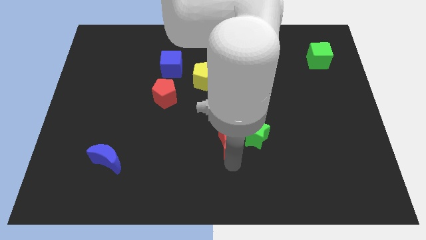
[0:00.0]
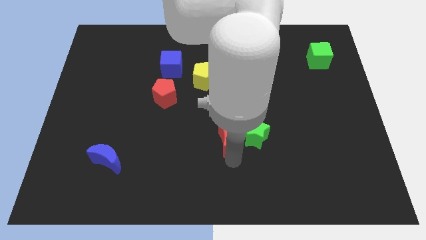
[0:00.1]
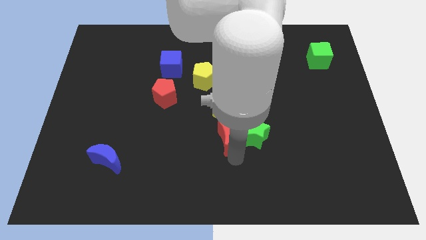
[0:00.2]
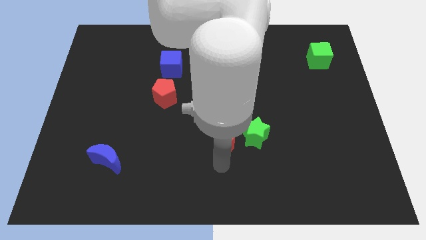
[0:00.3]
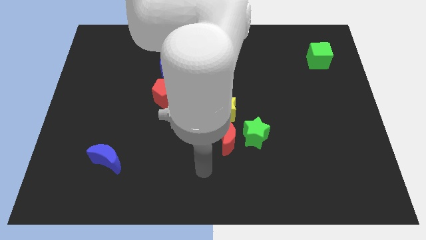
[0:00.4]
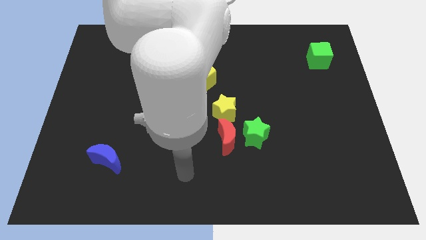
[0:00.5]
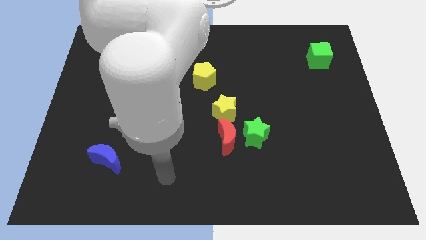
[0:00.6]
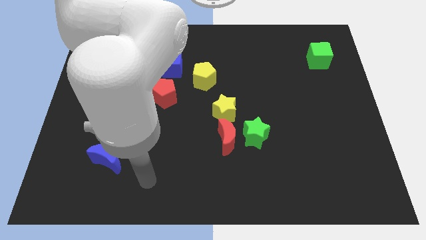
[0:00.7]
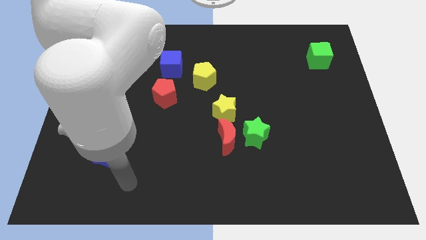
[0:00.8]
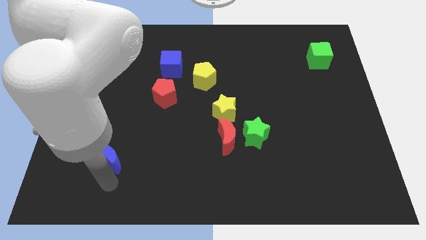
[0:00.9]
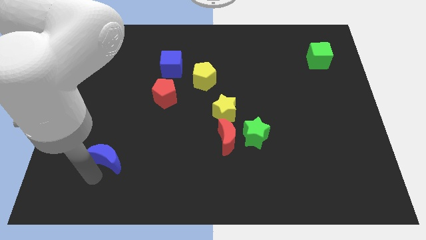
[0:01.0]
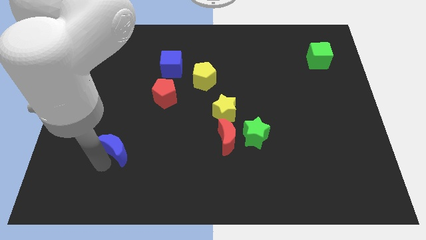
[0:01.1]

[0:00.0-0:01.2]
move your arm to the bottom of the blue moon

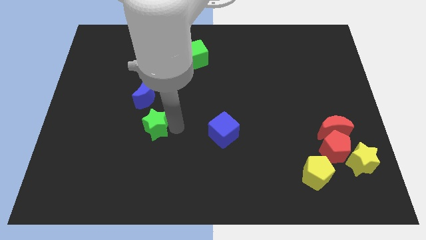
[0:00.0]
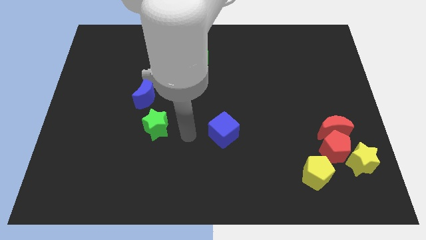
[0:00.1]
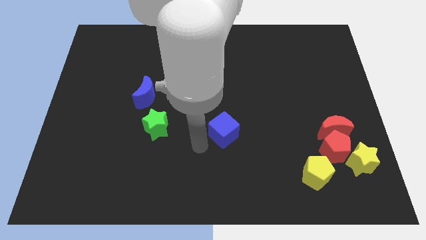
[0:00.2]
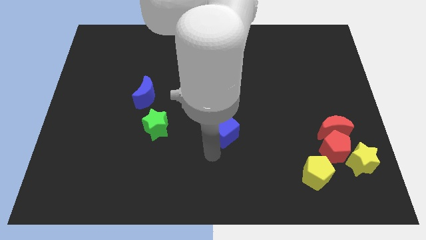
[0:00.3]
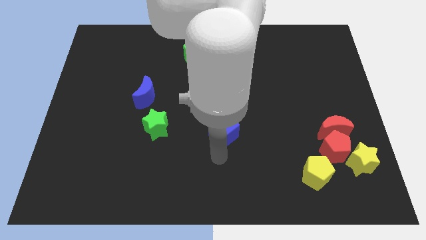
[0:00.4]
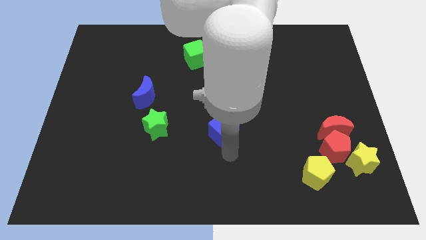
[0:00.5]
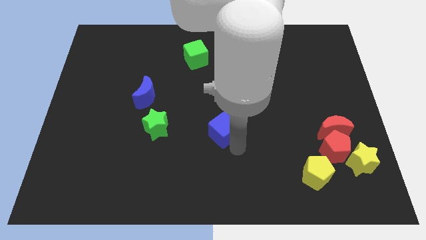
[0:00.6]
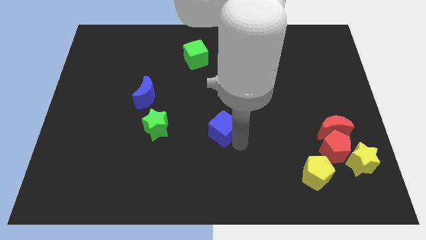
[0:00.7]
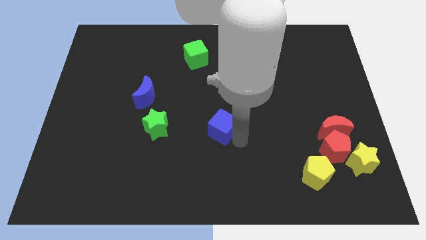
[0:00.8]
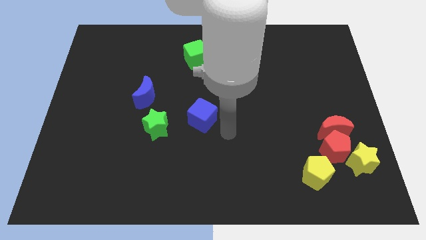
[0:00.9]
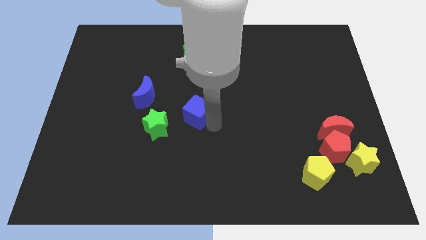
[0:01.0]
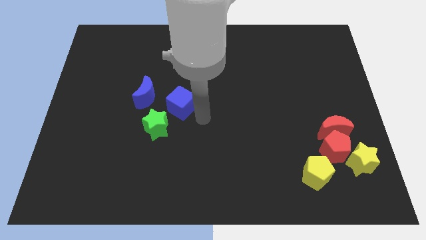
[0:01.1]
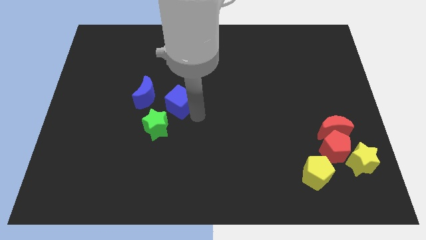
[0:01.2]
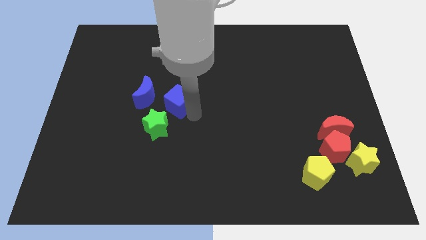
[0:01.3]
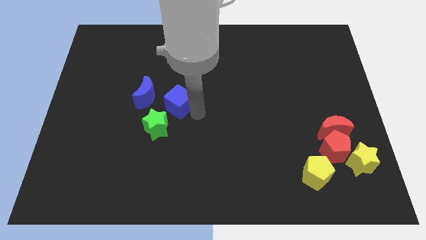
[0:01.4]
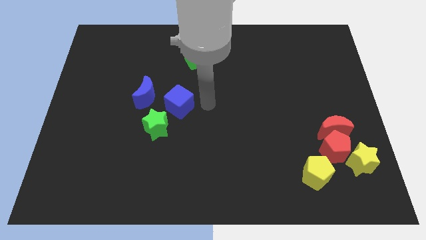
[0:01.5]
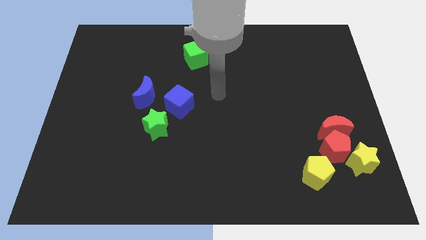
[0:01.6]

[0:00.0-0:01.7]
push the blue cube to the right of the blue crescent

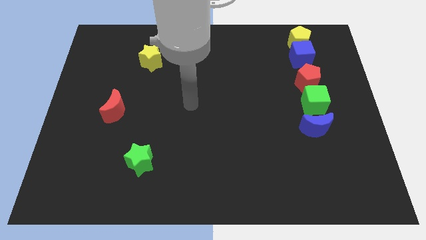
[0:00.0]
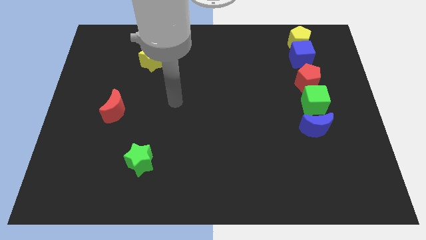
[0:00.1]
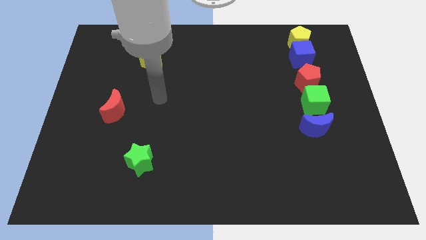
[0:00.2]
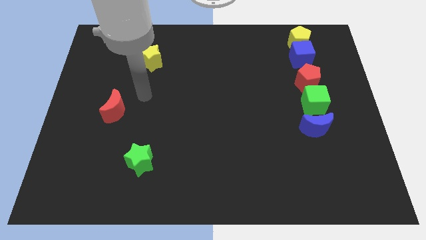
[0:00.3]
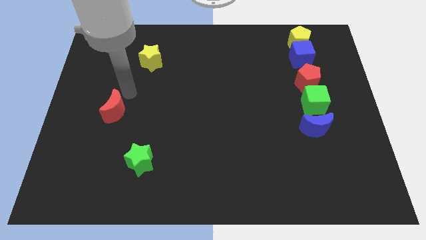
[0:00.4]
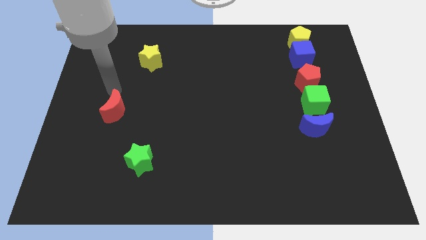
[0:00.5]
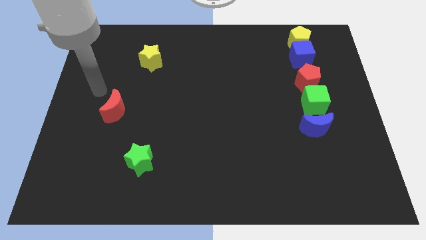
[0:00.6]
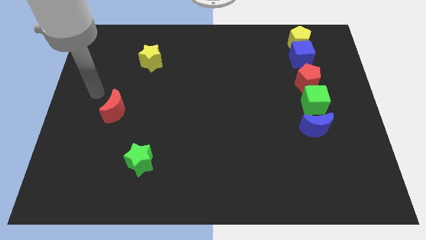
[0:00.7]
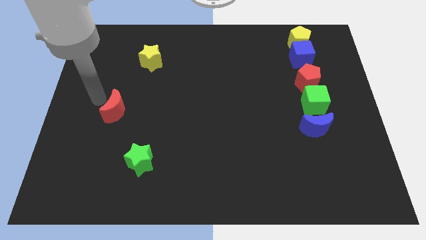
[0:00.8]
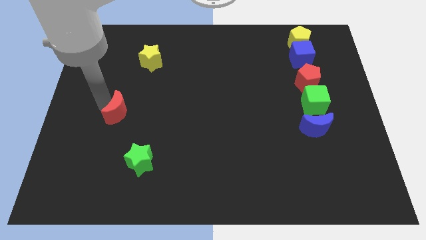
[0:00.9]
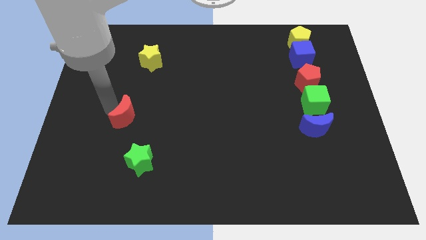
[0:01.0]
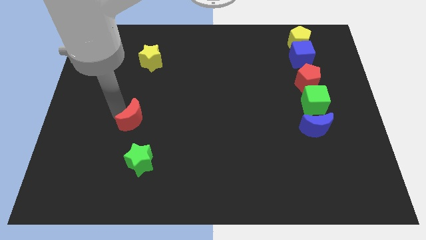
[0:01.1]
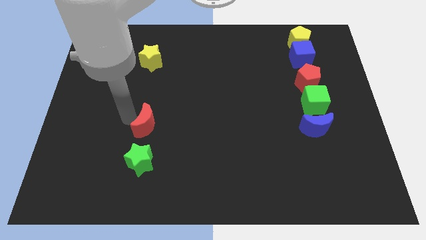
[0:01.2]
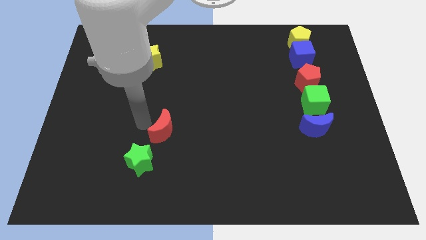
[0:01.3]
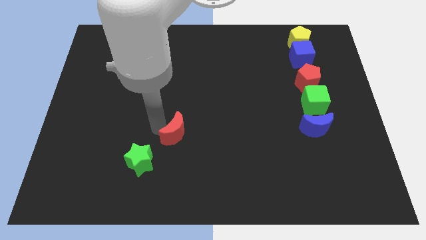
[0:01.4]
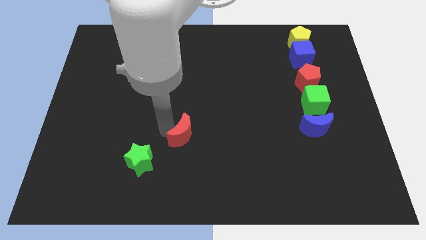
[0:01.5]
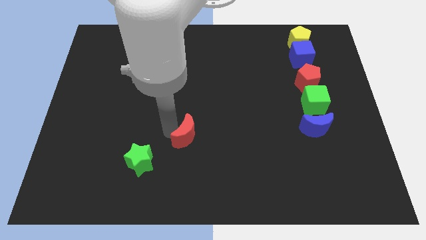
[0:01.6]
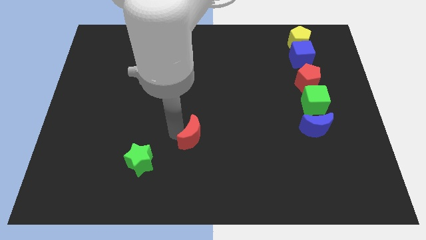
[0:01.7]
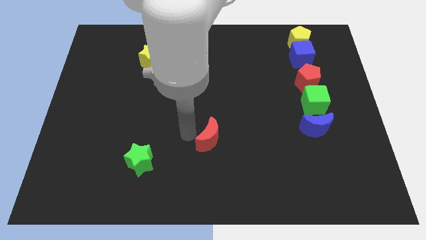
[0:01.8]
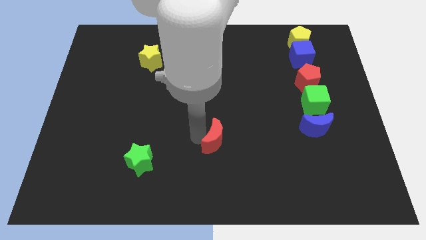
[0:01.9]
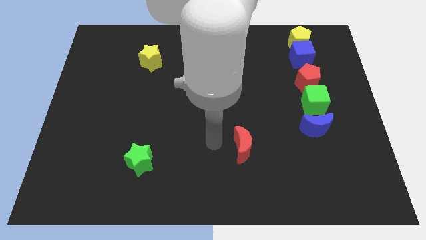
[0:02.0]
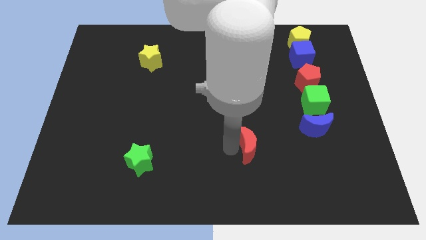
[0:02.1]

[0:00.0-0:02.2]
place the red moon at the center of the board

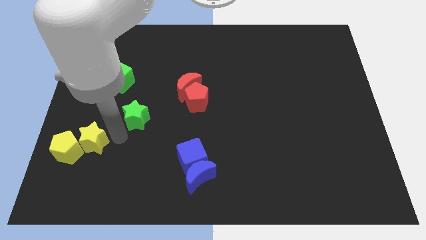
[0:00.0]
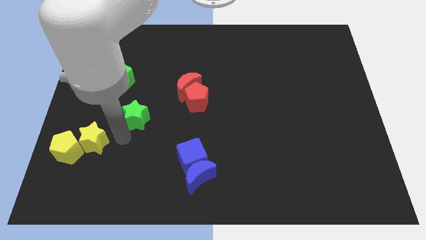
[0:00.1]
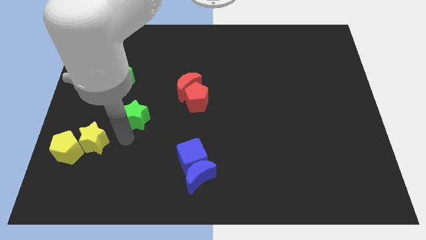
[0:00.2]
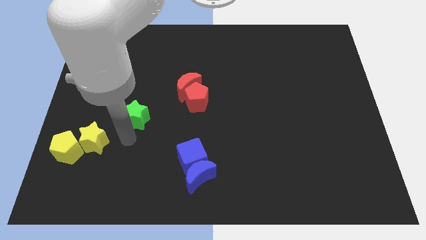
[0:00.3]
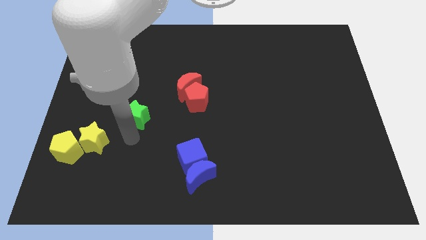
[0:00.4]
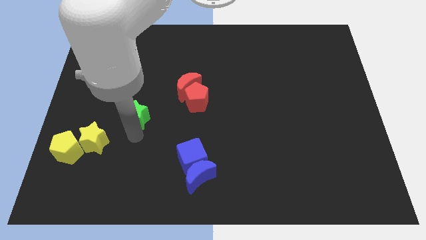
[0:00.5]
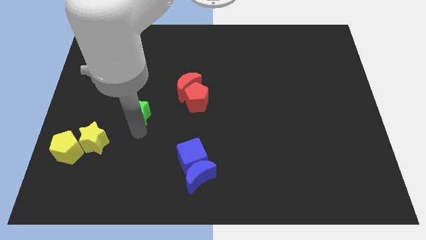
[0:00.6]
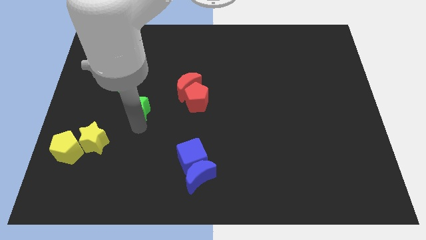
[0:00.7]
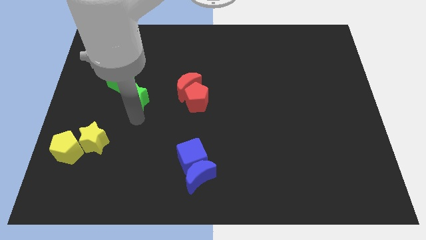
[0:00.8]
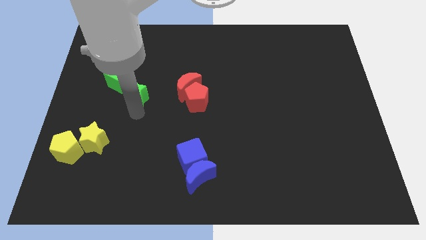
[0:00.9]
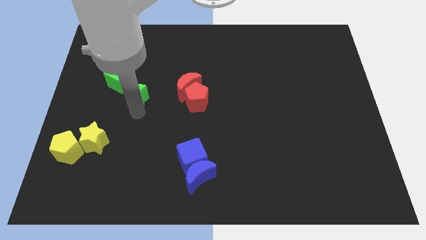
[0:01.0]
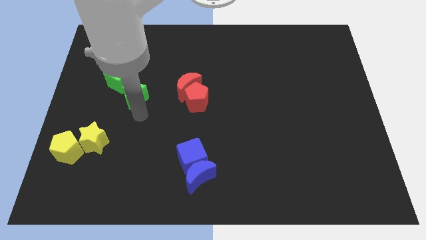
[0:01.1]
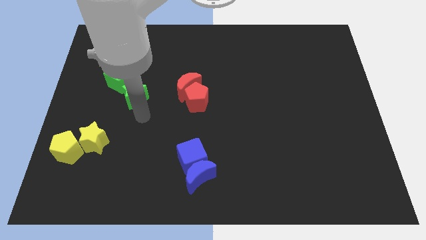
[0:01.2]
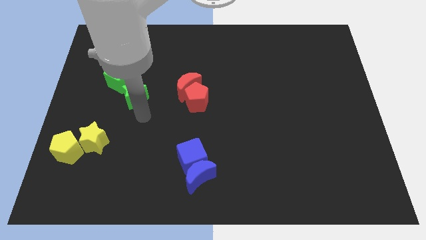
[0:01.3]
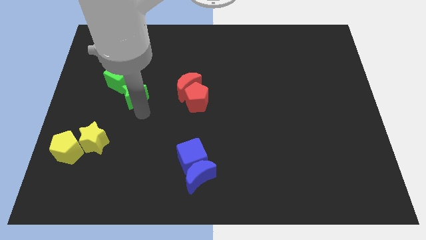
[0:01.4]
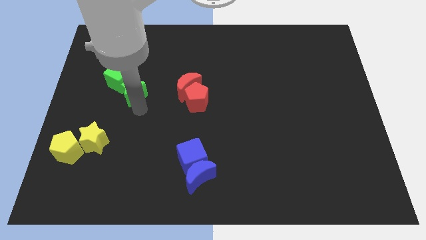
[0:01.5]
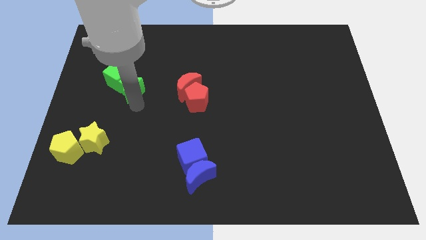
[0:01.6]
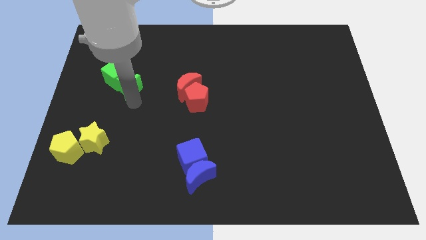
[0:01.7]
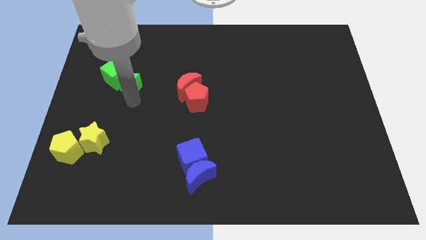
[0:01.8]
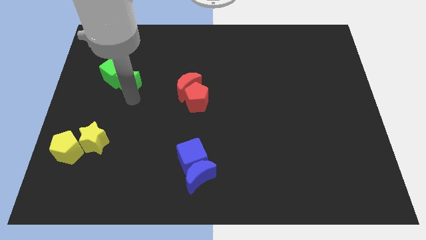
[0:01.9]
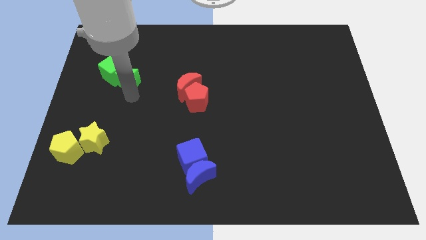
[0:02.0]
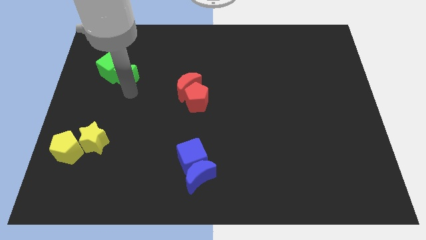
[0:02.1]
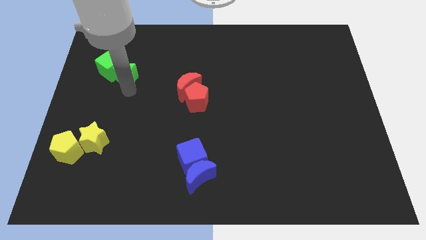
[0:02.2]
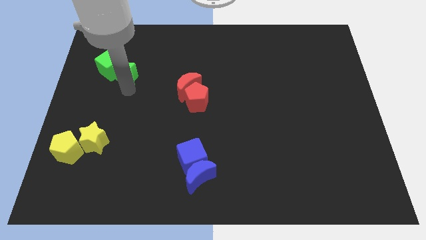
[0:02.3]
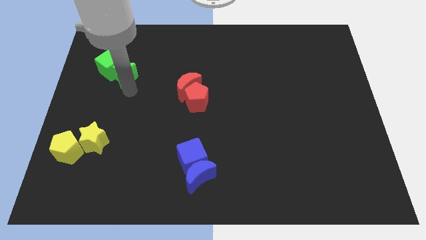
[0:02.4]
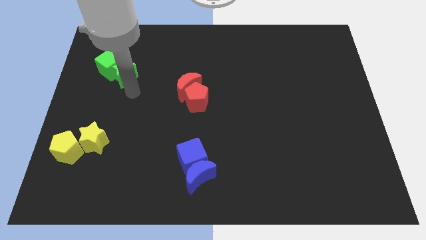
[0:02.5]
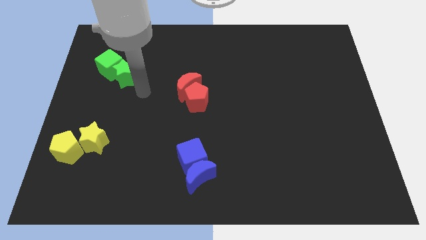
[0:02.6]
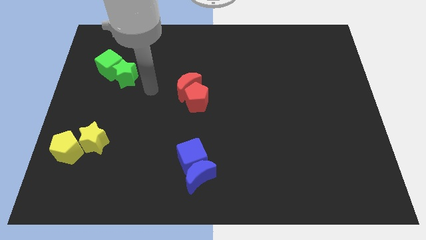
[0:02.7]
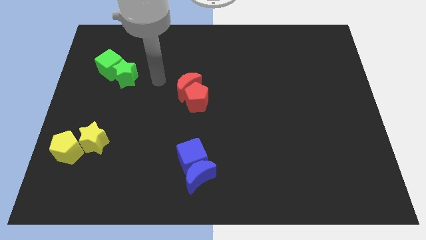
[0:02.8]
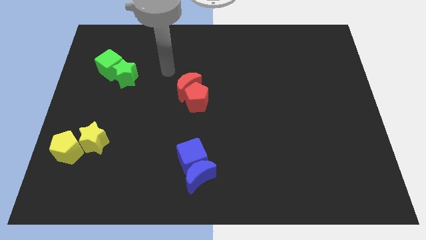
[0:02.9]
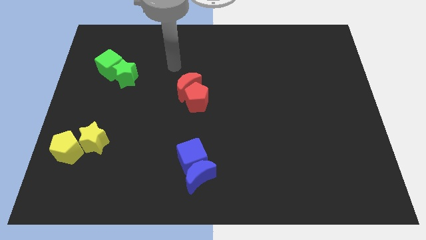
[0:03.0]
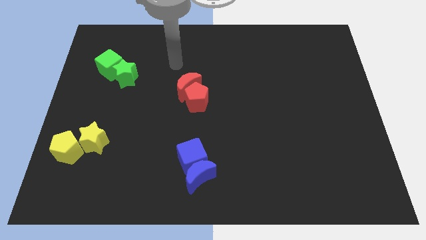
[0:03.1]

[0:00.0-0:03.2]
drag green star along with the green cube towards the top left

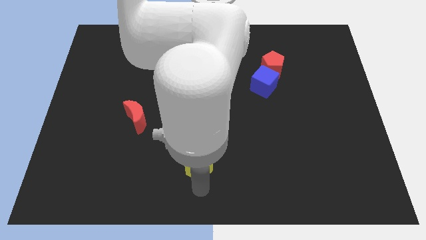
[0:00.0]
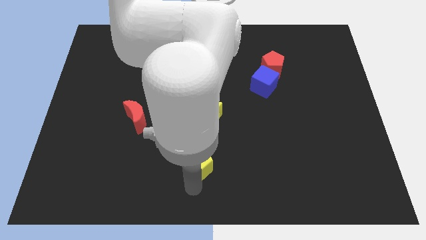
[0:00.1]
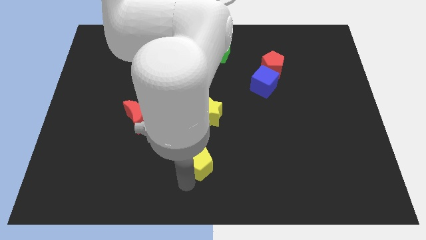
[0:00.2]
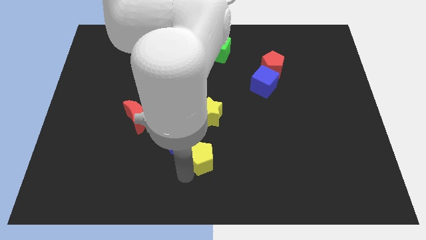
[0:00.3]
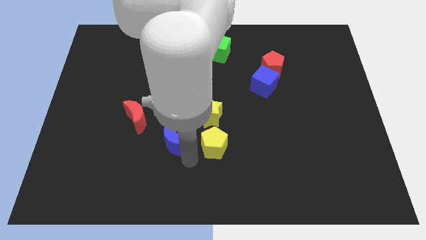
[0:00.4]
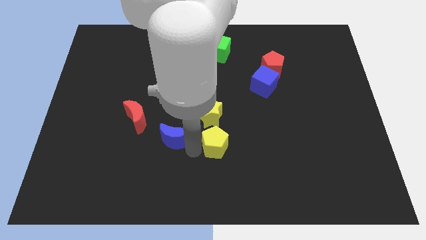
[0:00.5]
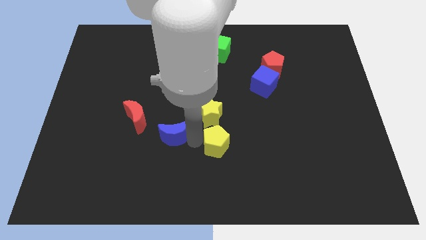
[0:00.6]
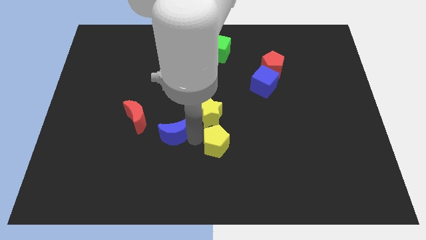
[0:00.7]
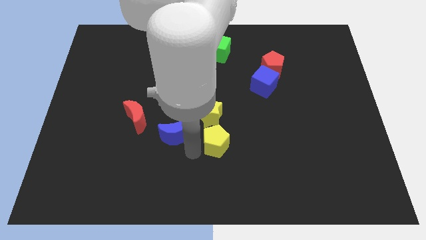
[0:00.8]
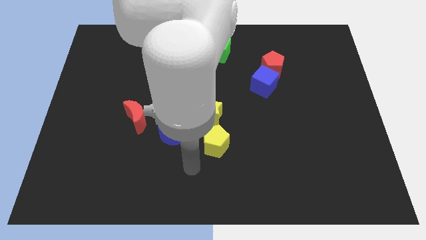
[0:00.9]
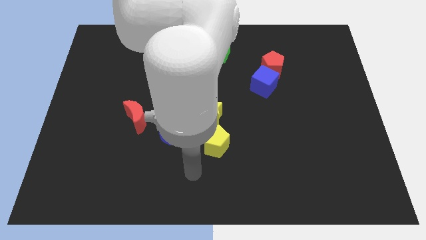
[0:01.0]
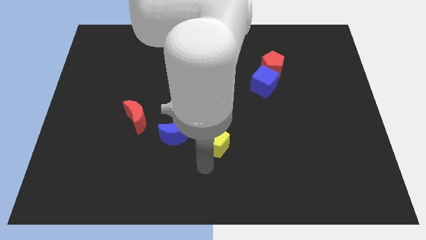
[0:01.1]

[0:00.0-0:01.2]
separate the yellow pentagon from the blue crescent
